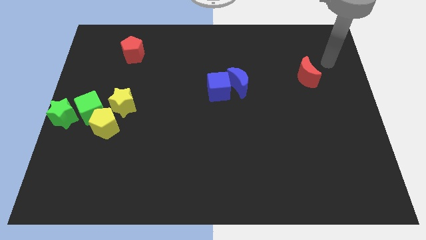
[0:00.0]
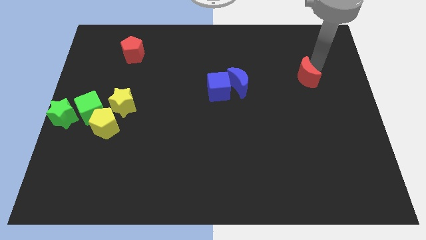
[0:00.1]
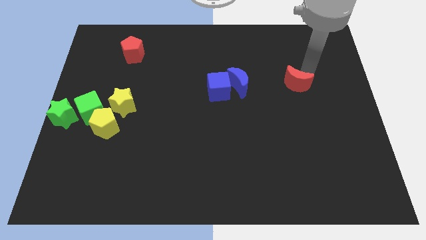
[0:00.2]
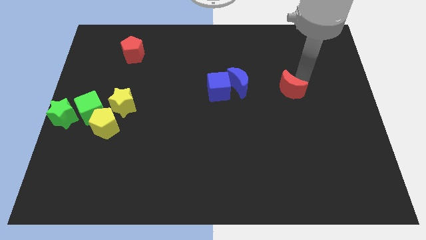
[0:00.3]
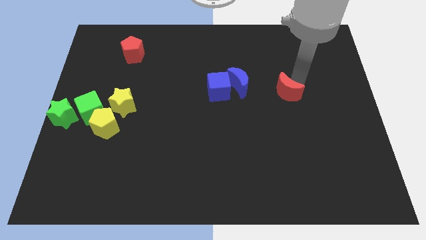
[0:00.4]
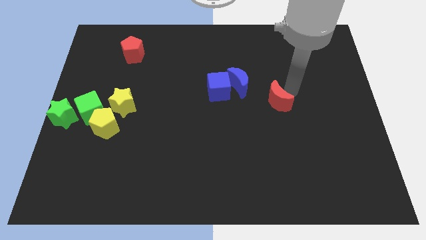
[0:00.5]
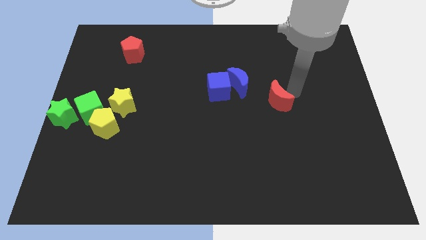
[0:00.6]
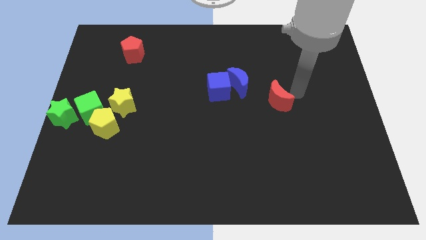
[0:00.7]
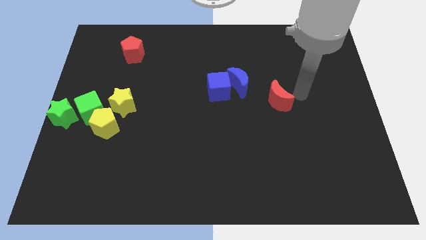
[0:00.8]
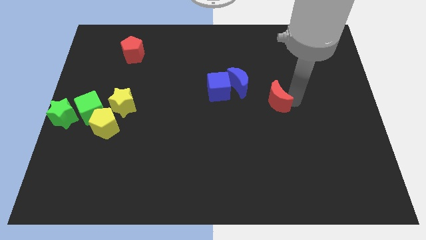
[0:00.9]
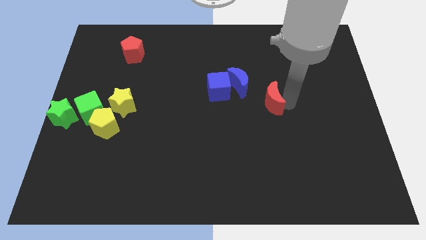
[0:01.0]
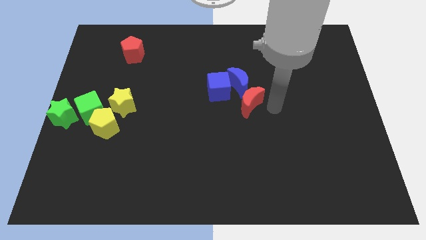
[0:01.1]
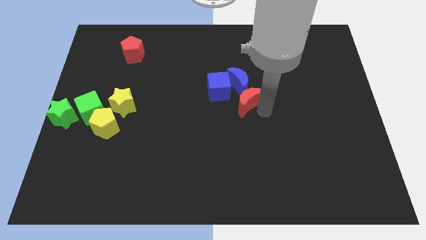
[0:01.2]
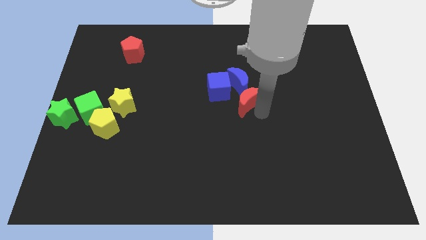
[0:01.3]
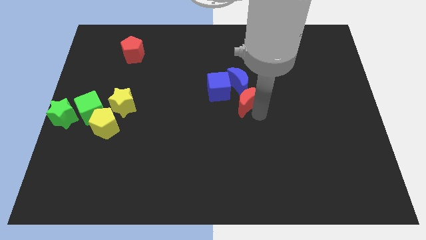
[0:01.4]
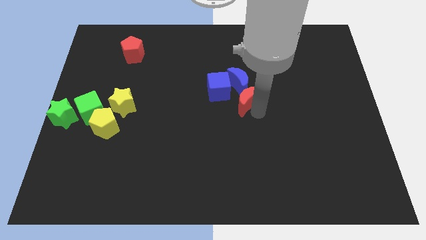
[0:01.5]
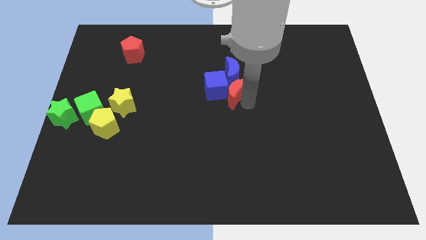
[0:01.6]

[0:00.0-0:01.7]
add the red crescent to the both blue blocks

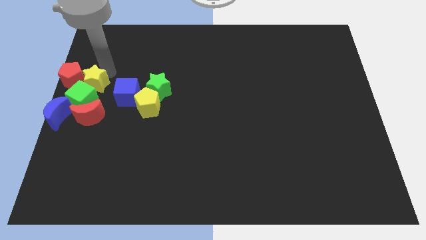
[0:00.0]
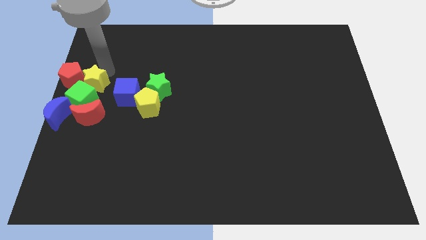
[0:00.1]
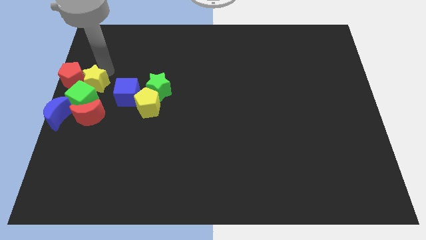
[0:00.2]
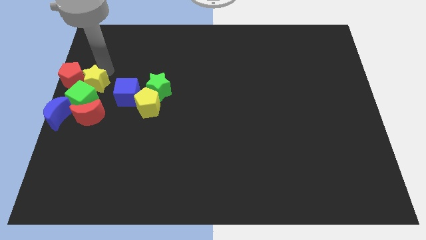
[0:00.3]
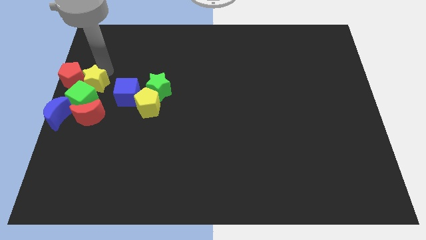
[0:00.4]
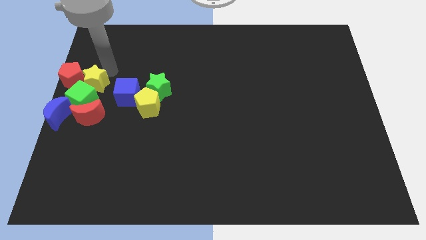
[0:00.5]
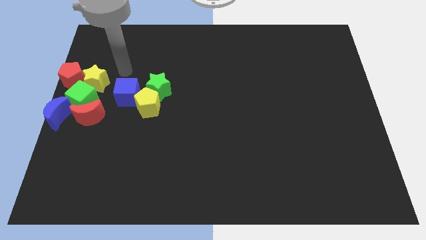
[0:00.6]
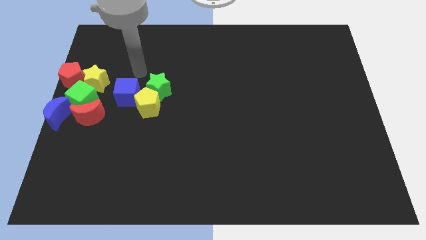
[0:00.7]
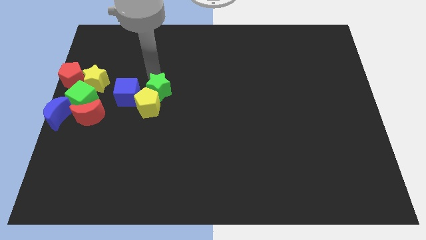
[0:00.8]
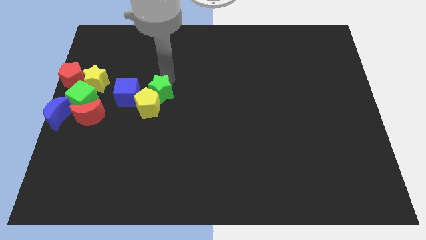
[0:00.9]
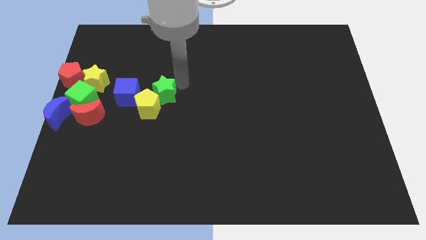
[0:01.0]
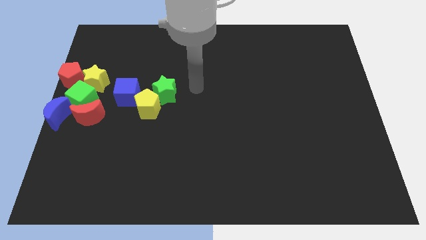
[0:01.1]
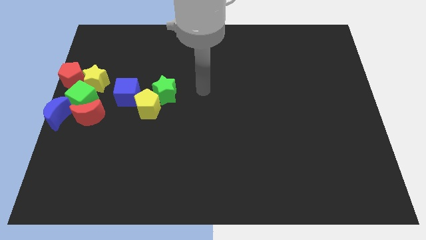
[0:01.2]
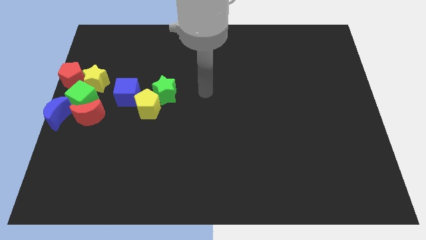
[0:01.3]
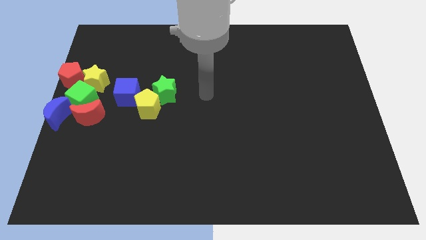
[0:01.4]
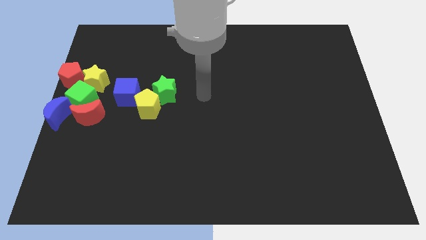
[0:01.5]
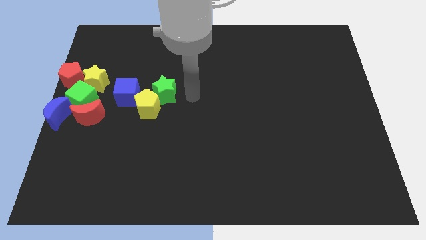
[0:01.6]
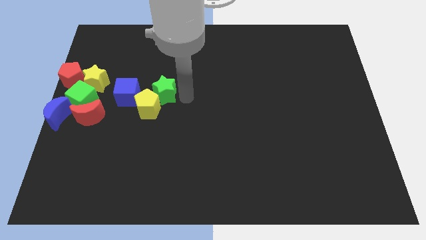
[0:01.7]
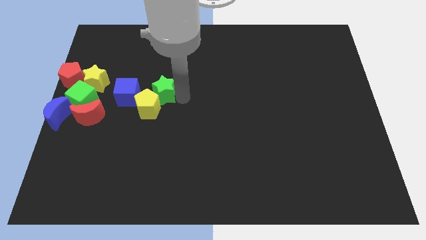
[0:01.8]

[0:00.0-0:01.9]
move the arm towards the green star

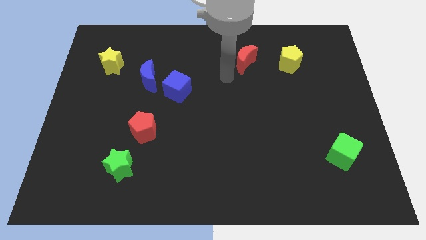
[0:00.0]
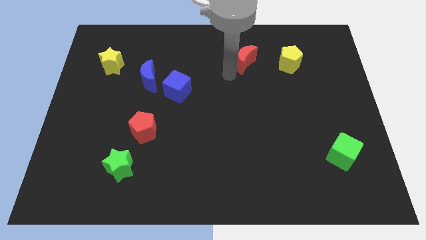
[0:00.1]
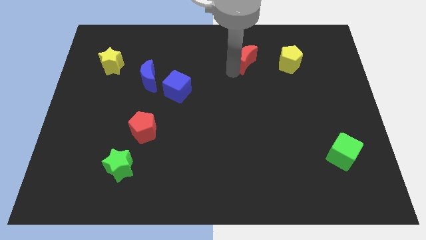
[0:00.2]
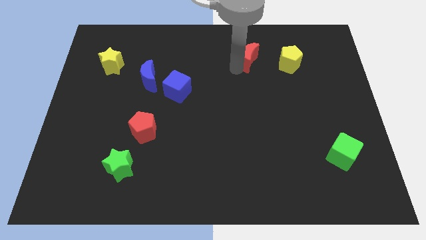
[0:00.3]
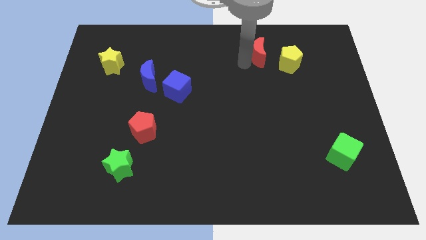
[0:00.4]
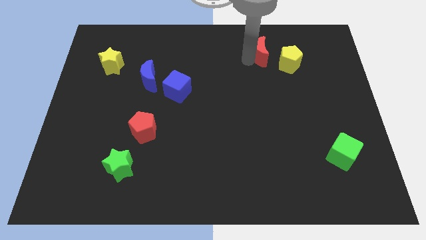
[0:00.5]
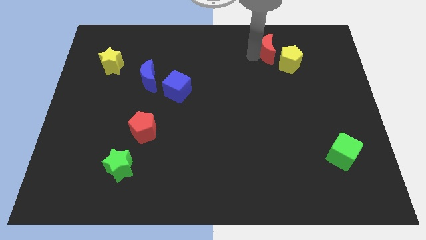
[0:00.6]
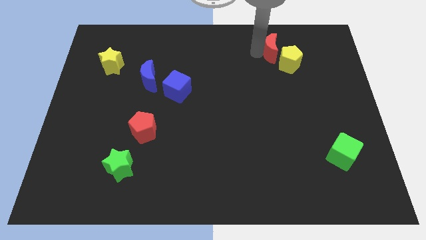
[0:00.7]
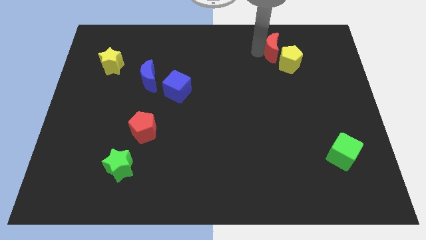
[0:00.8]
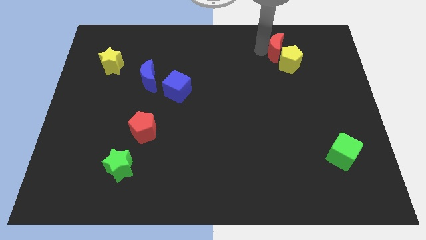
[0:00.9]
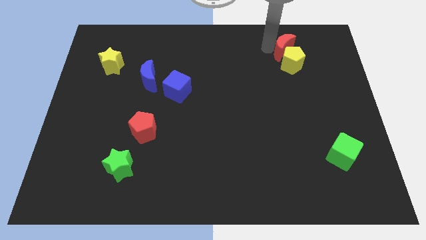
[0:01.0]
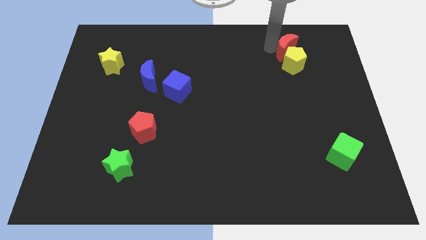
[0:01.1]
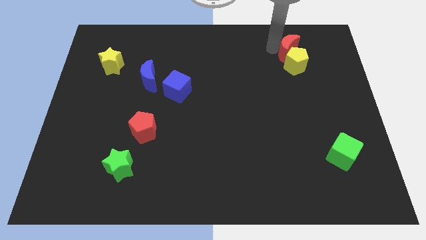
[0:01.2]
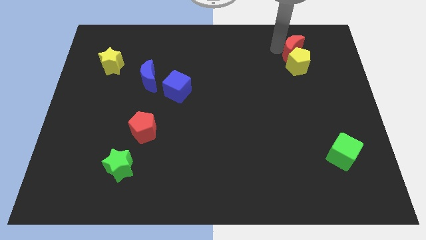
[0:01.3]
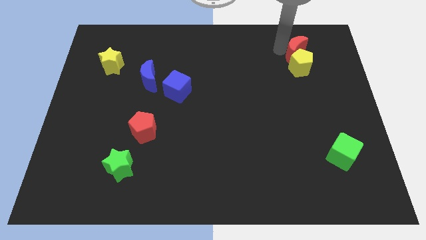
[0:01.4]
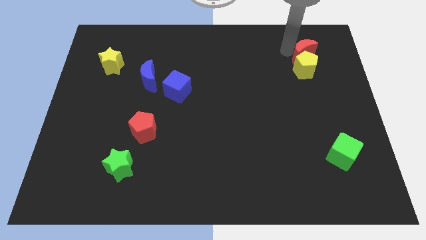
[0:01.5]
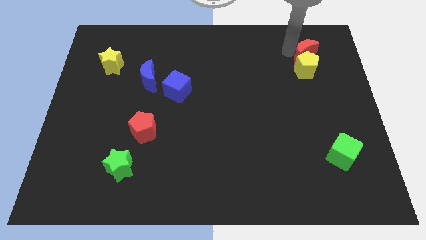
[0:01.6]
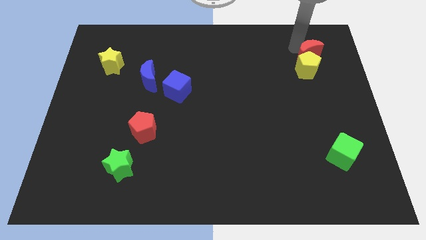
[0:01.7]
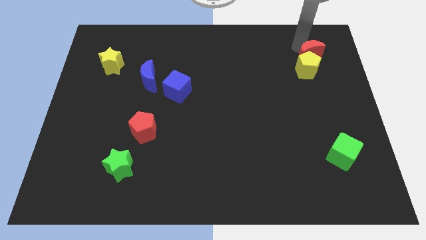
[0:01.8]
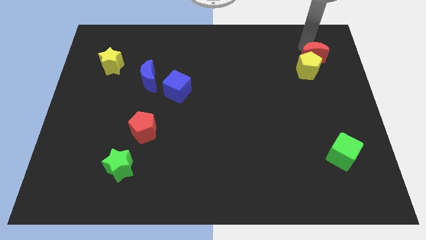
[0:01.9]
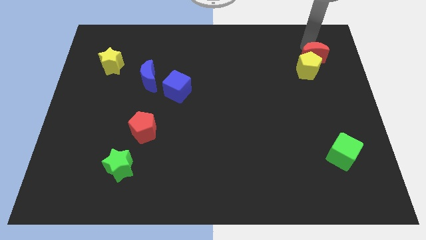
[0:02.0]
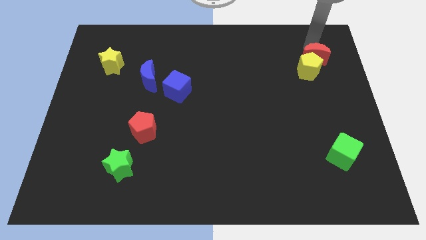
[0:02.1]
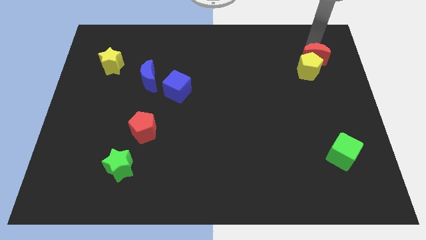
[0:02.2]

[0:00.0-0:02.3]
move the red moon to the top side of the yellow pentagon

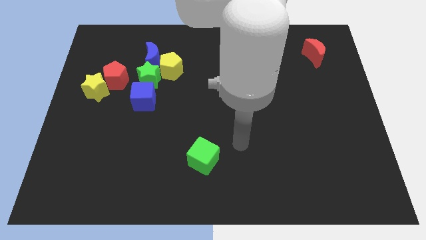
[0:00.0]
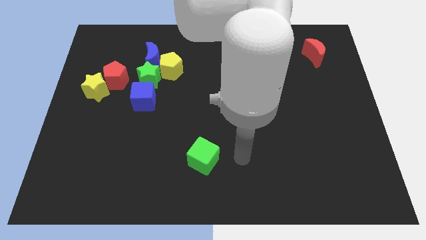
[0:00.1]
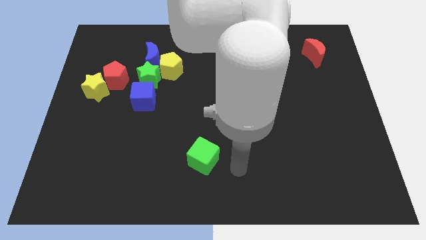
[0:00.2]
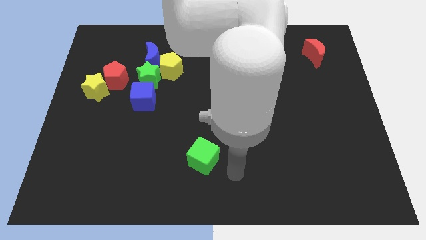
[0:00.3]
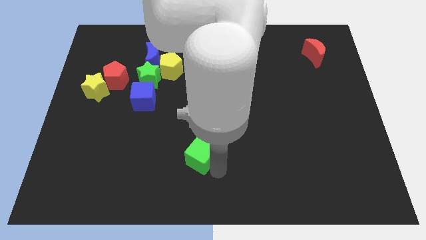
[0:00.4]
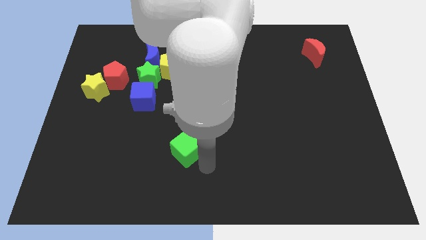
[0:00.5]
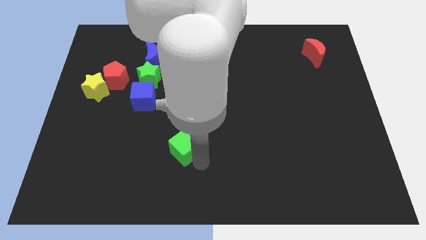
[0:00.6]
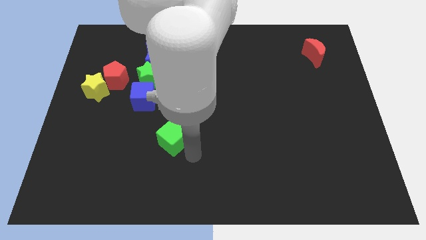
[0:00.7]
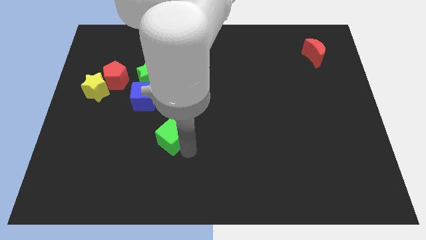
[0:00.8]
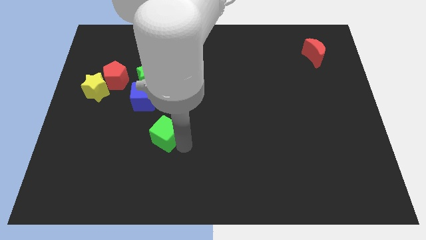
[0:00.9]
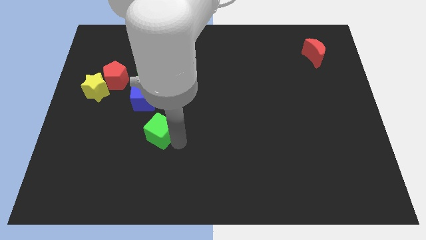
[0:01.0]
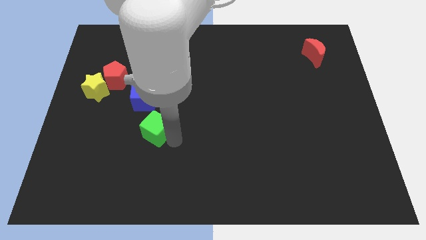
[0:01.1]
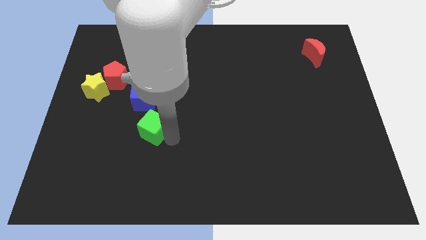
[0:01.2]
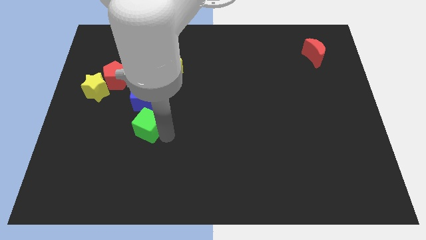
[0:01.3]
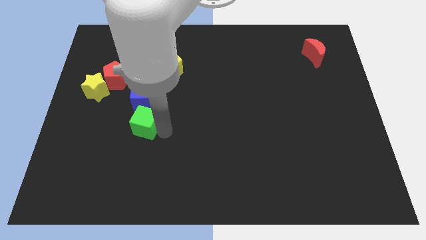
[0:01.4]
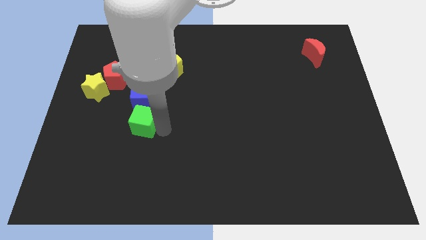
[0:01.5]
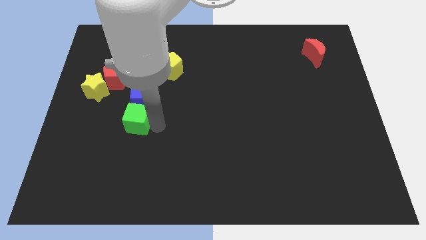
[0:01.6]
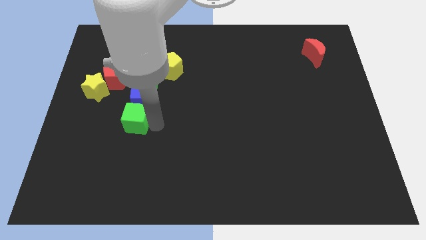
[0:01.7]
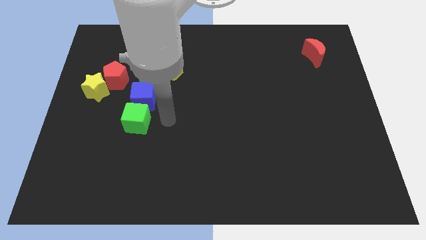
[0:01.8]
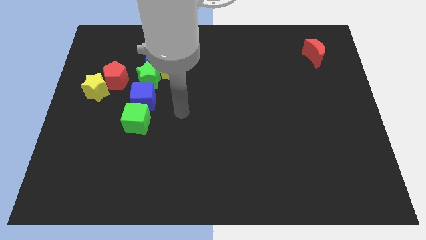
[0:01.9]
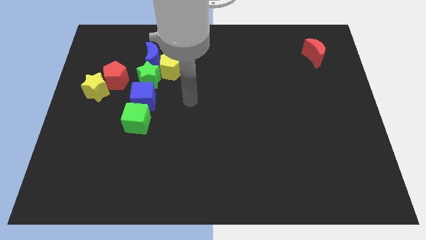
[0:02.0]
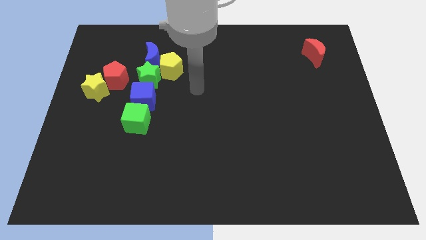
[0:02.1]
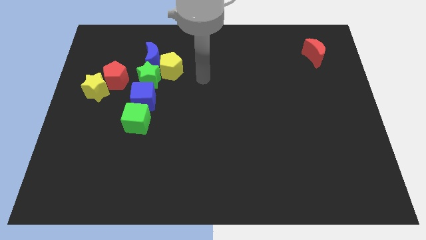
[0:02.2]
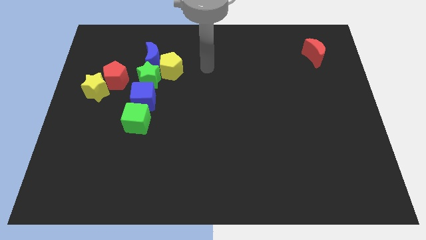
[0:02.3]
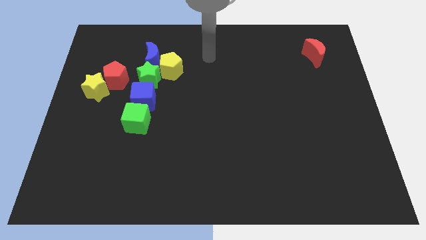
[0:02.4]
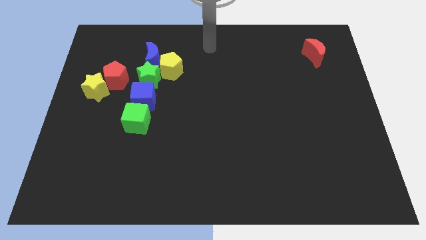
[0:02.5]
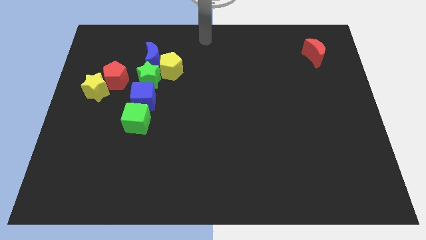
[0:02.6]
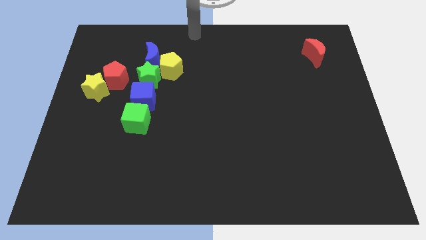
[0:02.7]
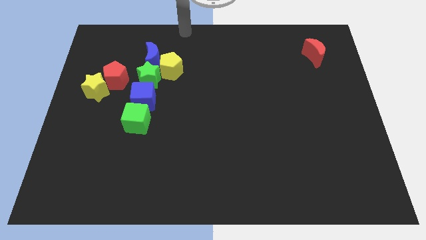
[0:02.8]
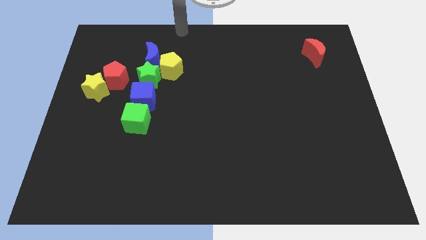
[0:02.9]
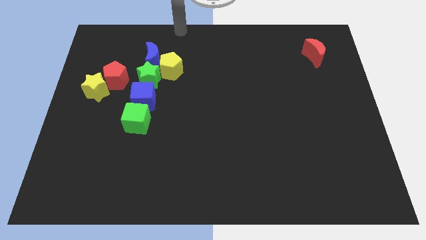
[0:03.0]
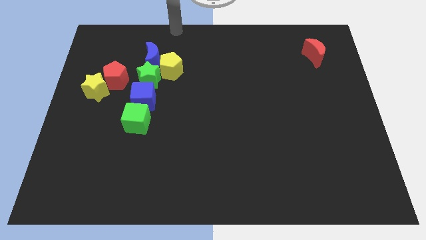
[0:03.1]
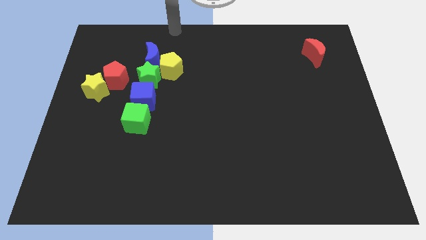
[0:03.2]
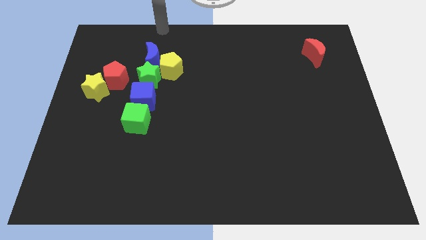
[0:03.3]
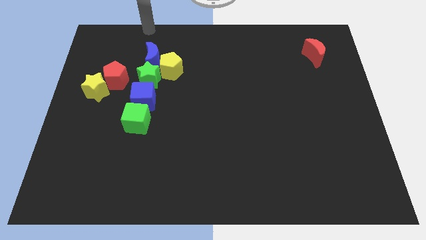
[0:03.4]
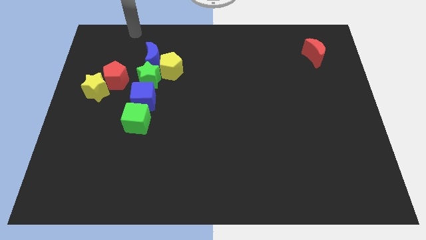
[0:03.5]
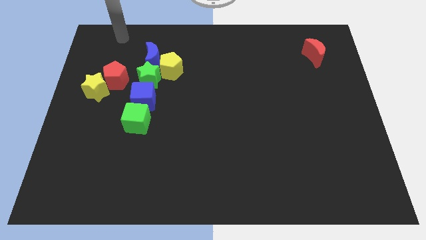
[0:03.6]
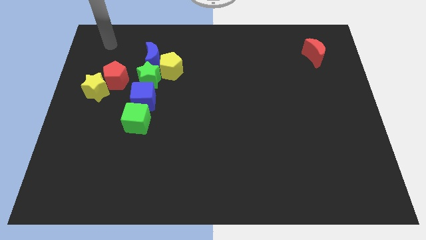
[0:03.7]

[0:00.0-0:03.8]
place the green cube at the bottom side of the blue cube
